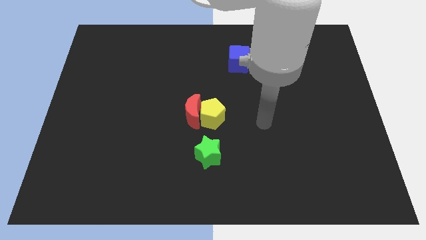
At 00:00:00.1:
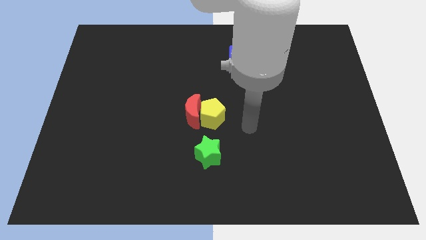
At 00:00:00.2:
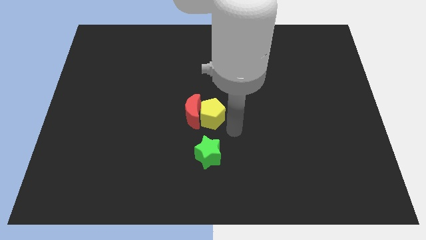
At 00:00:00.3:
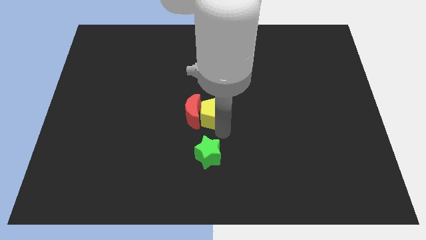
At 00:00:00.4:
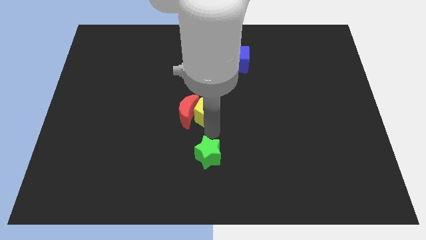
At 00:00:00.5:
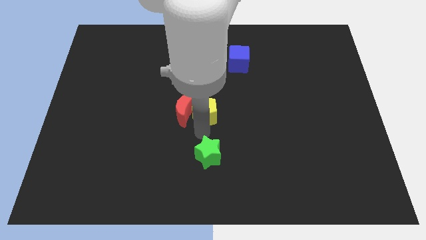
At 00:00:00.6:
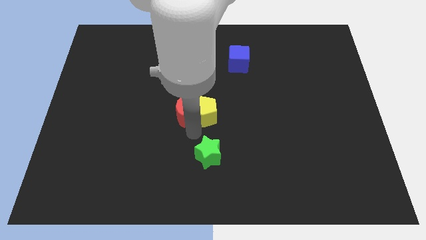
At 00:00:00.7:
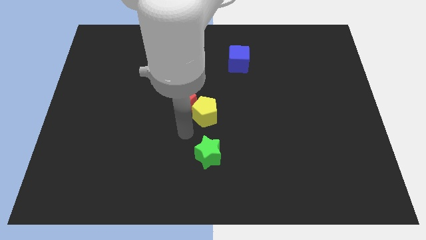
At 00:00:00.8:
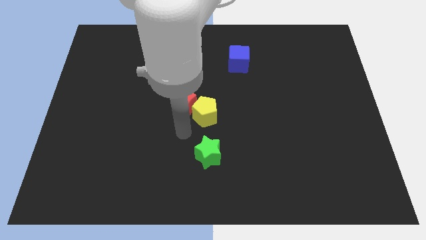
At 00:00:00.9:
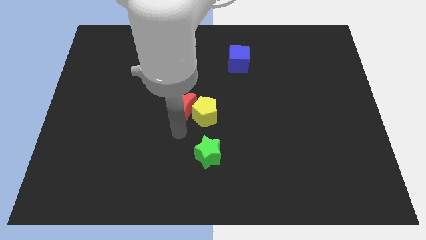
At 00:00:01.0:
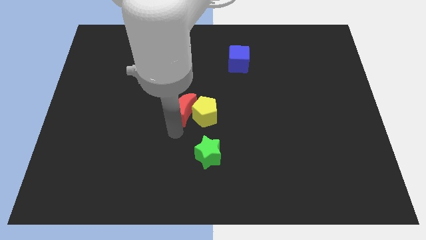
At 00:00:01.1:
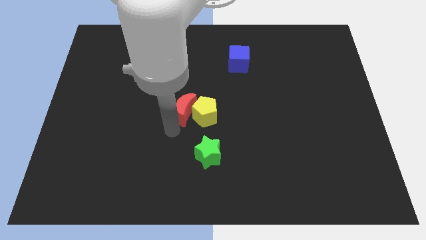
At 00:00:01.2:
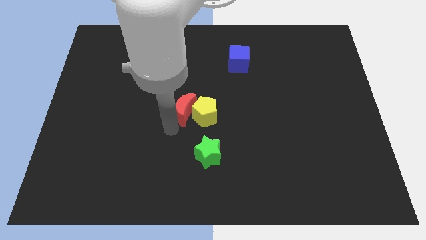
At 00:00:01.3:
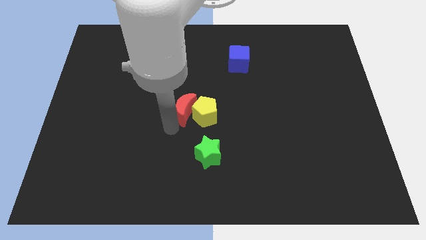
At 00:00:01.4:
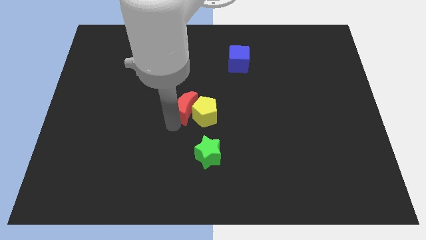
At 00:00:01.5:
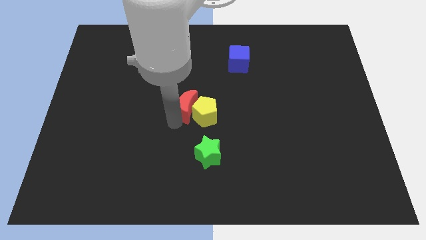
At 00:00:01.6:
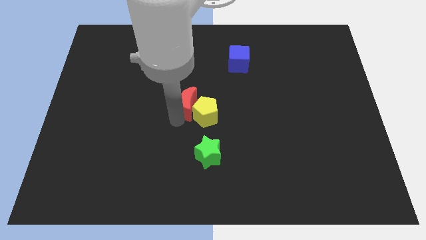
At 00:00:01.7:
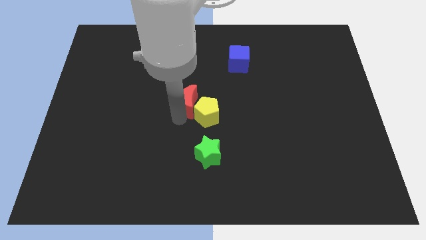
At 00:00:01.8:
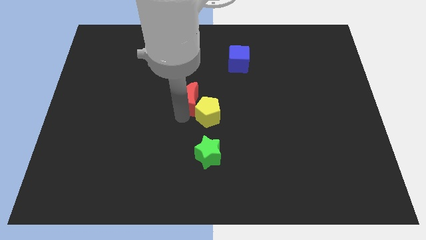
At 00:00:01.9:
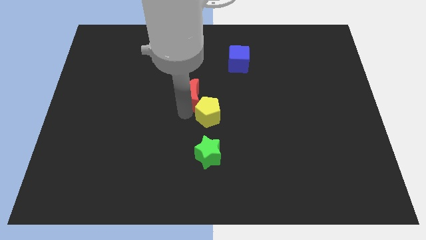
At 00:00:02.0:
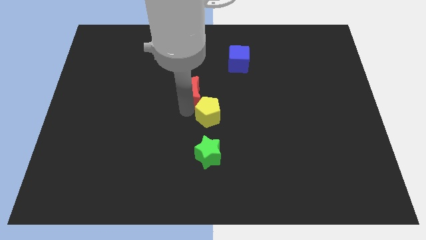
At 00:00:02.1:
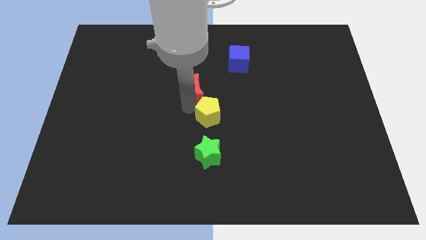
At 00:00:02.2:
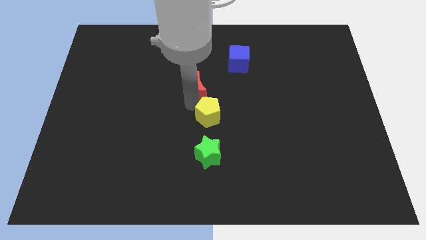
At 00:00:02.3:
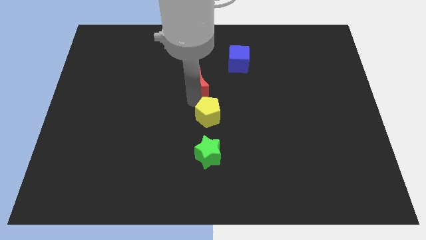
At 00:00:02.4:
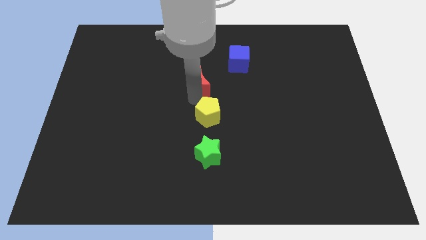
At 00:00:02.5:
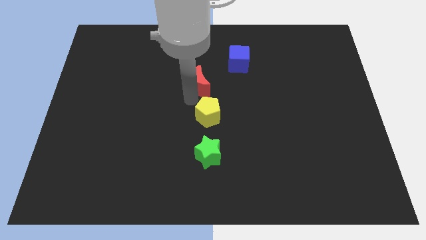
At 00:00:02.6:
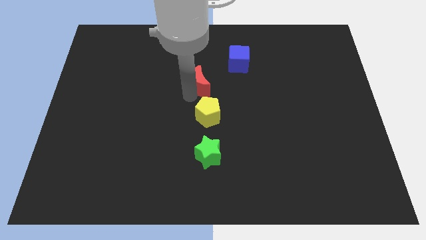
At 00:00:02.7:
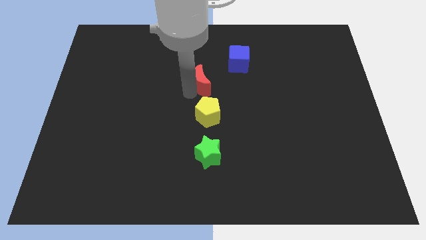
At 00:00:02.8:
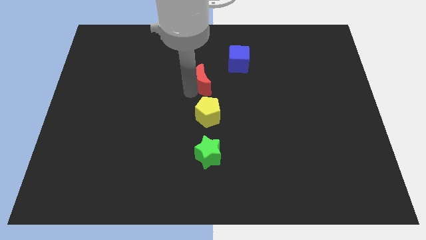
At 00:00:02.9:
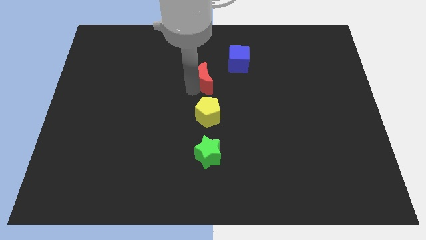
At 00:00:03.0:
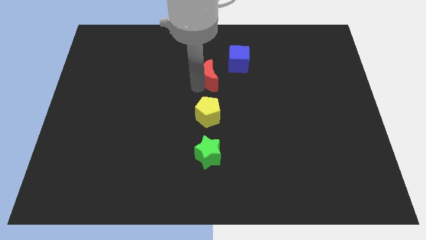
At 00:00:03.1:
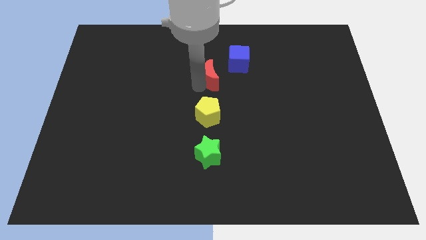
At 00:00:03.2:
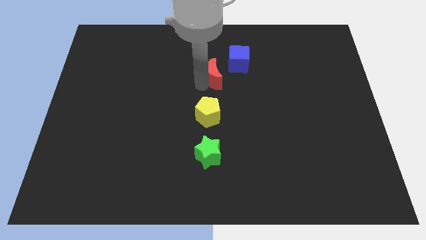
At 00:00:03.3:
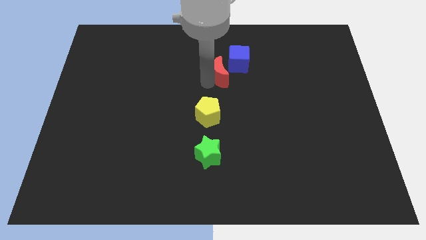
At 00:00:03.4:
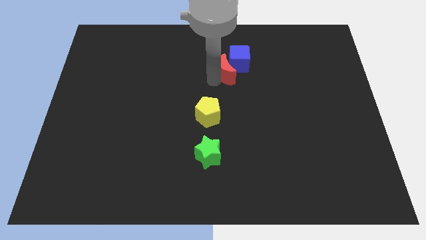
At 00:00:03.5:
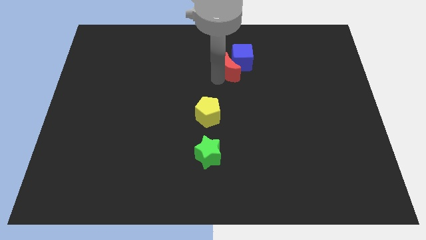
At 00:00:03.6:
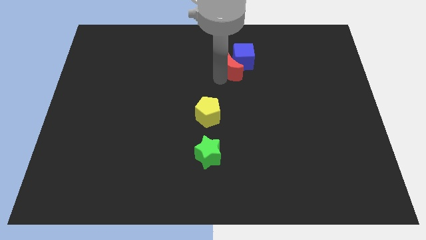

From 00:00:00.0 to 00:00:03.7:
move the red moon to the blue cube

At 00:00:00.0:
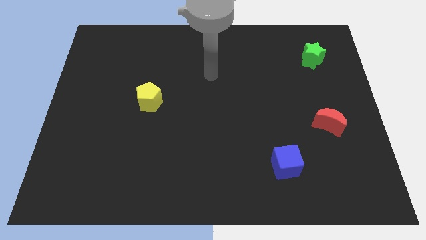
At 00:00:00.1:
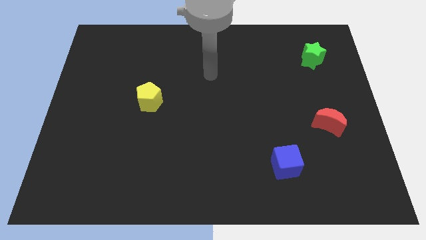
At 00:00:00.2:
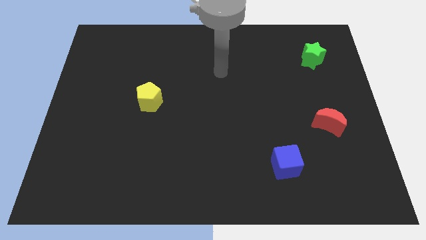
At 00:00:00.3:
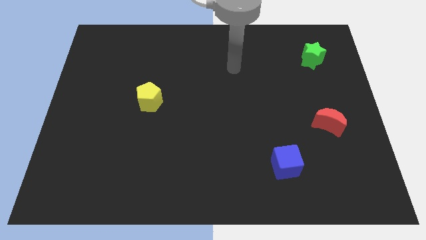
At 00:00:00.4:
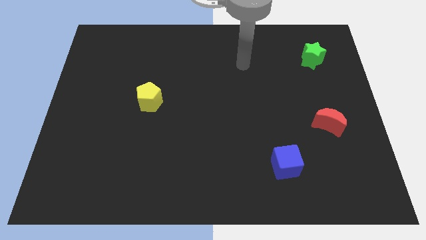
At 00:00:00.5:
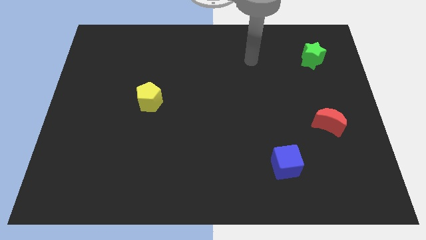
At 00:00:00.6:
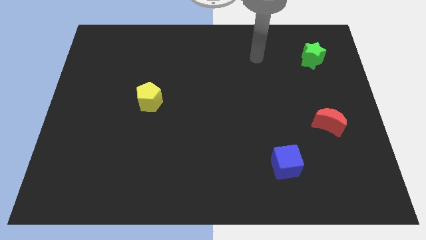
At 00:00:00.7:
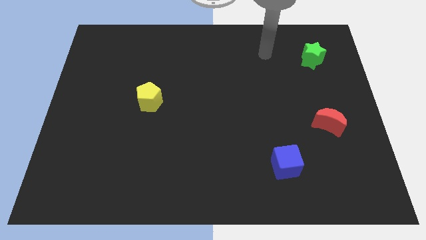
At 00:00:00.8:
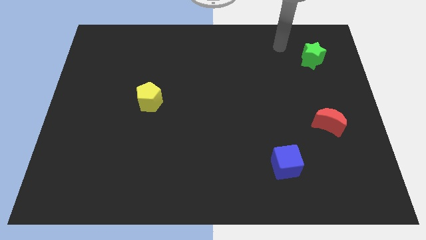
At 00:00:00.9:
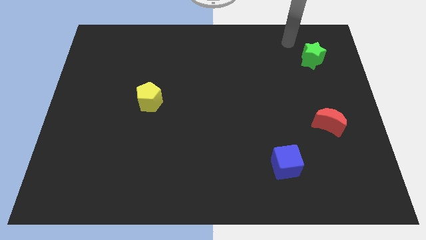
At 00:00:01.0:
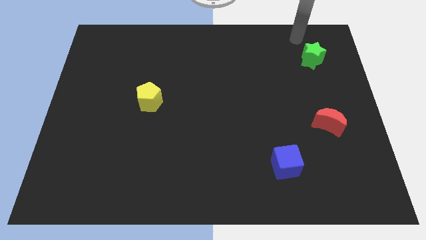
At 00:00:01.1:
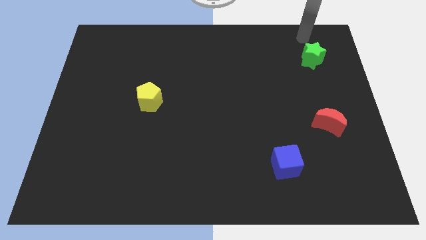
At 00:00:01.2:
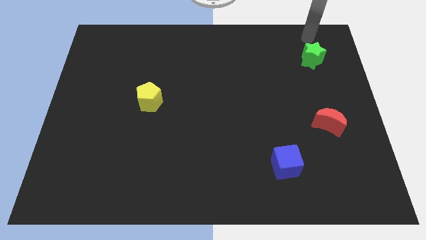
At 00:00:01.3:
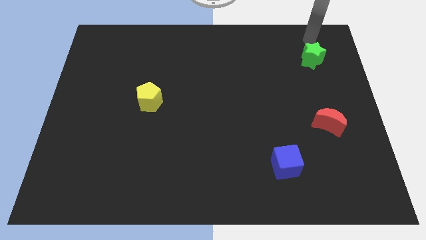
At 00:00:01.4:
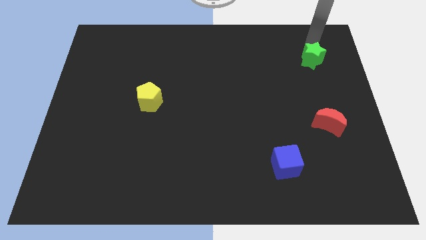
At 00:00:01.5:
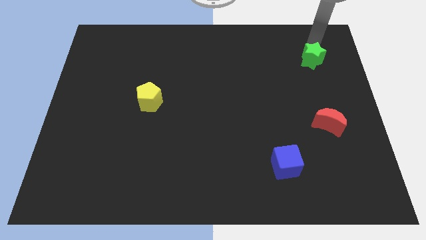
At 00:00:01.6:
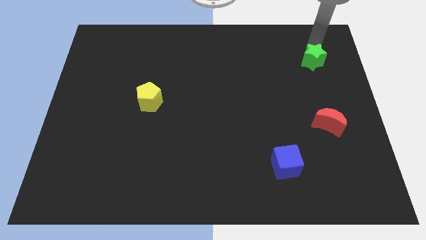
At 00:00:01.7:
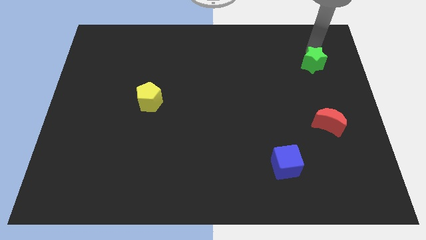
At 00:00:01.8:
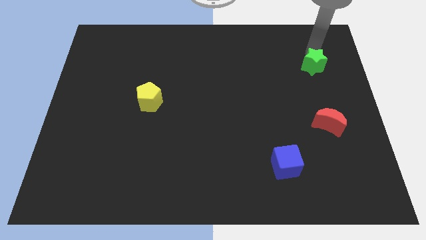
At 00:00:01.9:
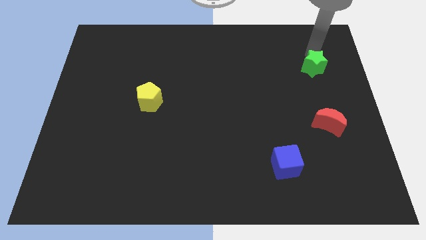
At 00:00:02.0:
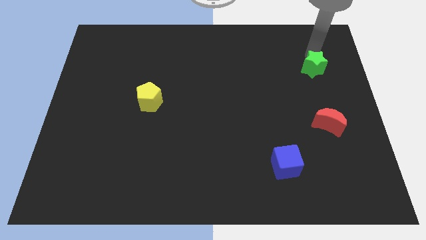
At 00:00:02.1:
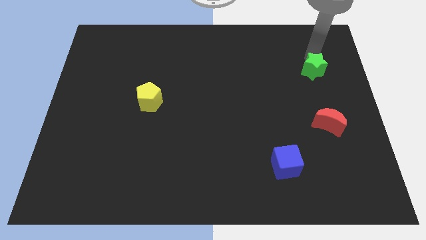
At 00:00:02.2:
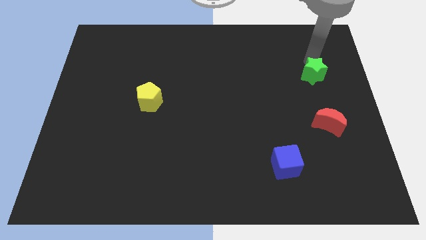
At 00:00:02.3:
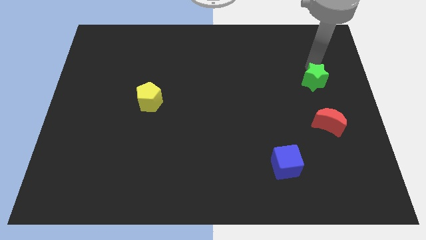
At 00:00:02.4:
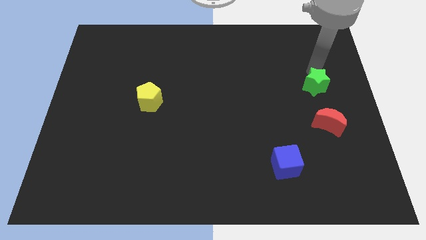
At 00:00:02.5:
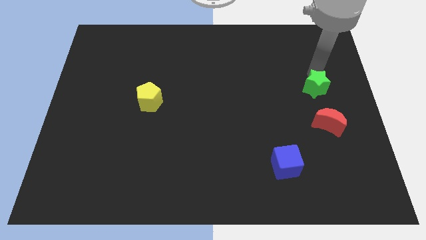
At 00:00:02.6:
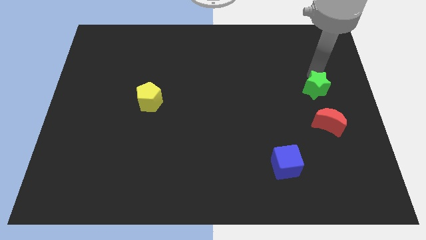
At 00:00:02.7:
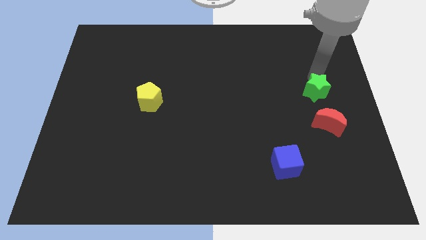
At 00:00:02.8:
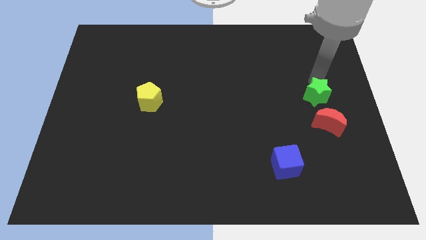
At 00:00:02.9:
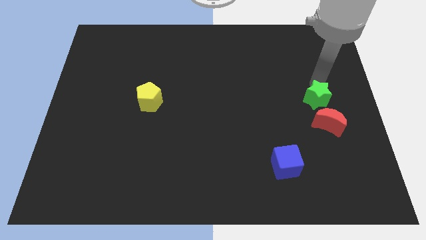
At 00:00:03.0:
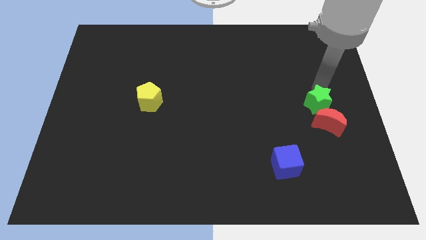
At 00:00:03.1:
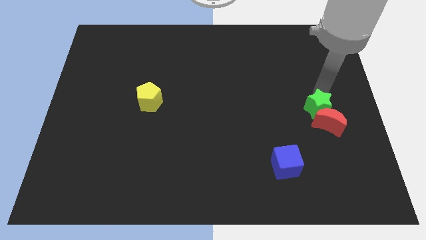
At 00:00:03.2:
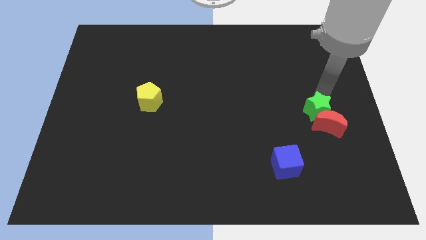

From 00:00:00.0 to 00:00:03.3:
slide the green block towards the moon

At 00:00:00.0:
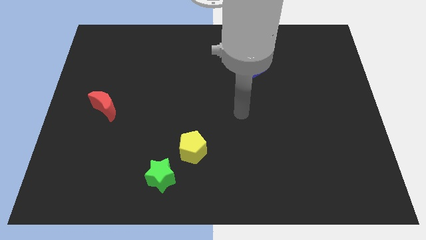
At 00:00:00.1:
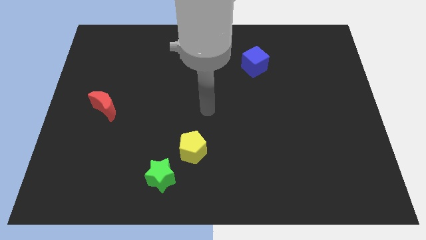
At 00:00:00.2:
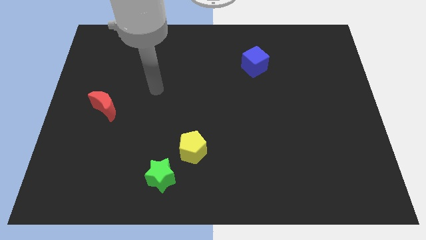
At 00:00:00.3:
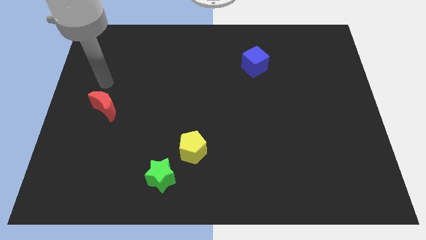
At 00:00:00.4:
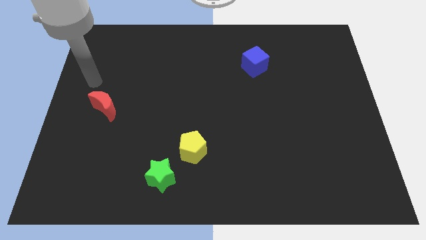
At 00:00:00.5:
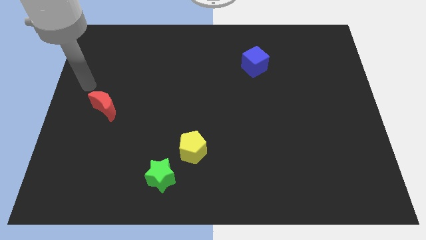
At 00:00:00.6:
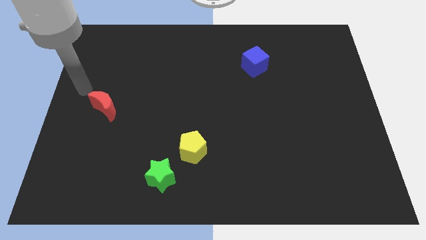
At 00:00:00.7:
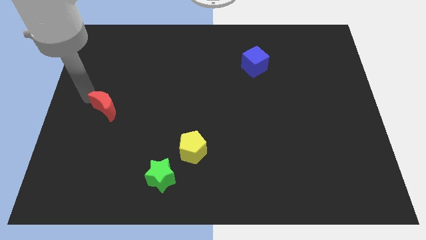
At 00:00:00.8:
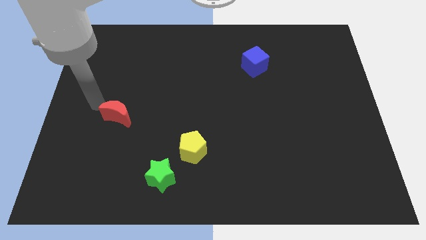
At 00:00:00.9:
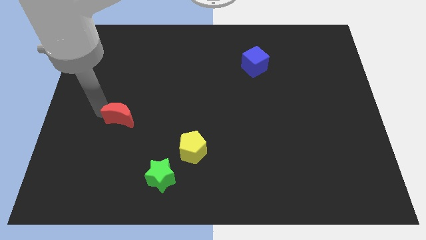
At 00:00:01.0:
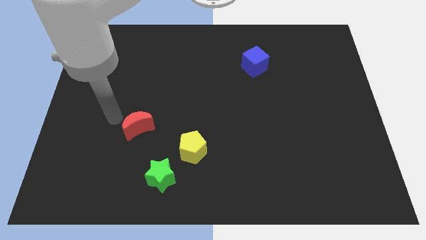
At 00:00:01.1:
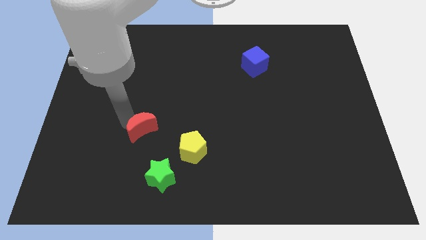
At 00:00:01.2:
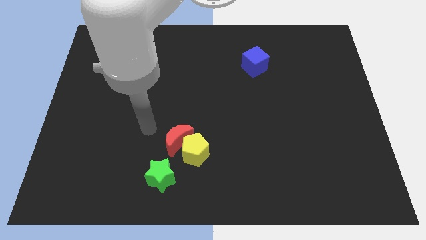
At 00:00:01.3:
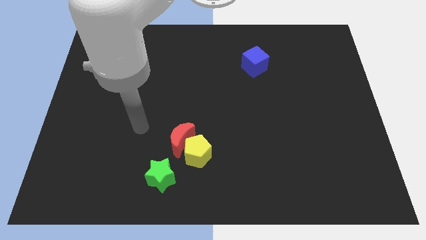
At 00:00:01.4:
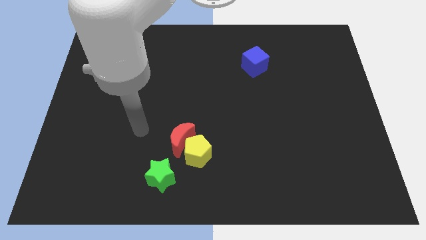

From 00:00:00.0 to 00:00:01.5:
push the red block towards the yellow block
